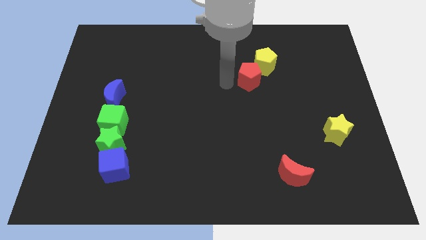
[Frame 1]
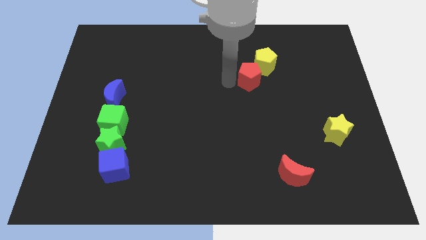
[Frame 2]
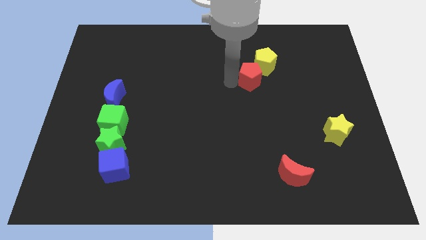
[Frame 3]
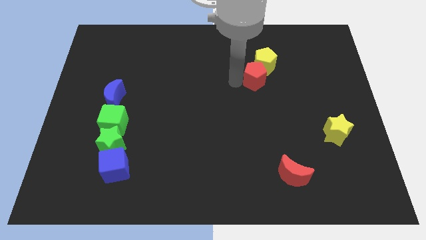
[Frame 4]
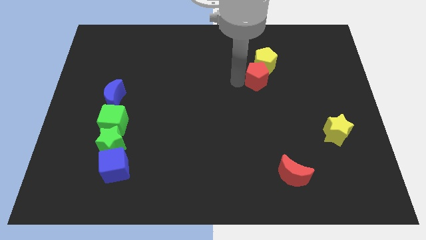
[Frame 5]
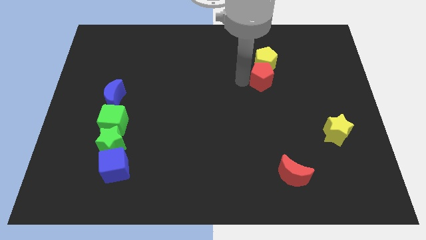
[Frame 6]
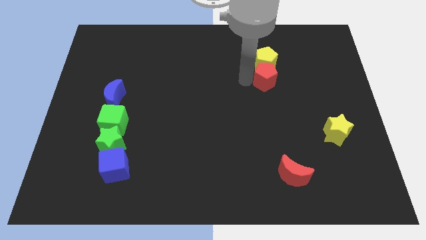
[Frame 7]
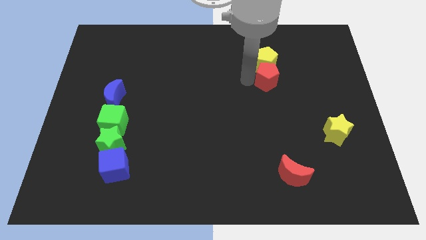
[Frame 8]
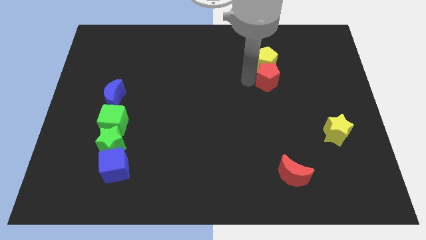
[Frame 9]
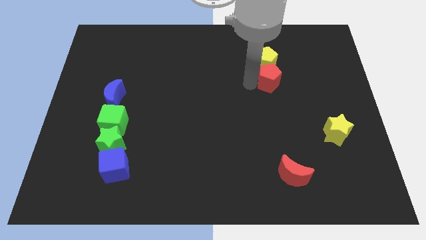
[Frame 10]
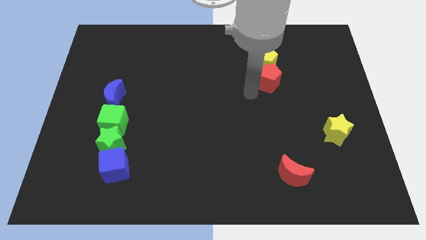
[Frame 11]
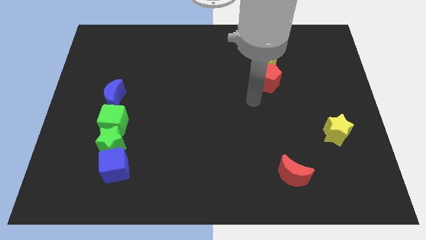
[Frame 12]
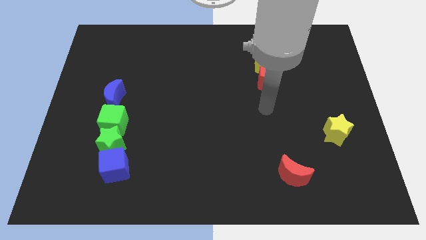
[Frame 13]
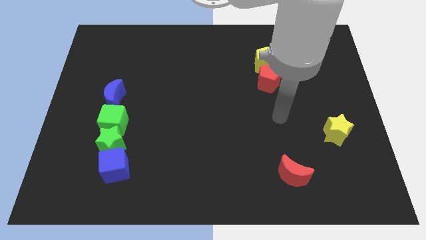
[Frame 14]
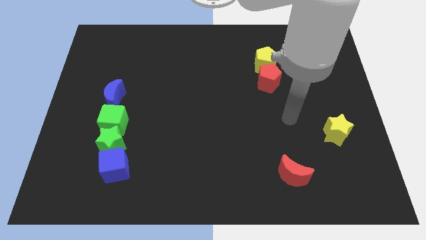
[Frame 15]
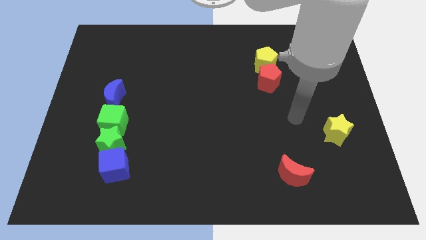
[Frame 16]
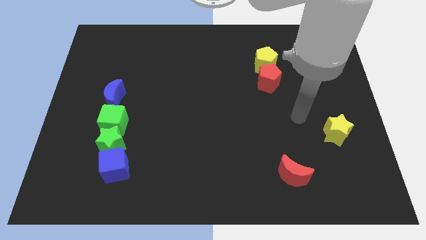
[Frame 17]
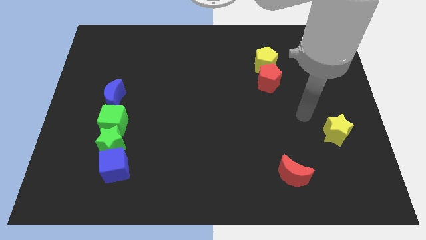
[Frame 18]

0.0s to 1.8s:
place the red pentagon to the bottom of the yellow pentagon

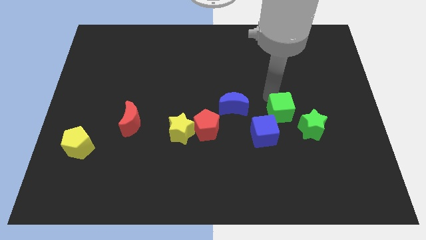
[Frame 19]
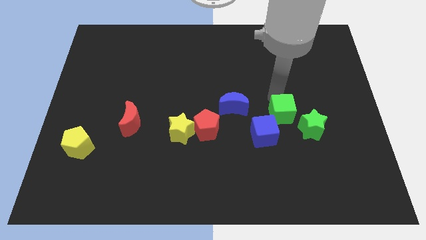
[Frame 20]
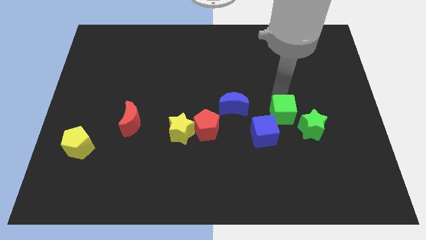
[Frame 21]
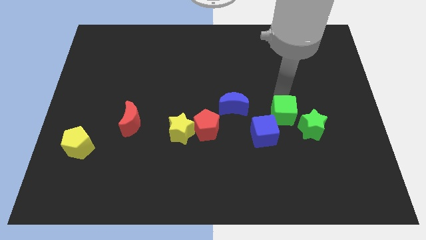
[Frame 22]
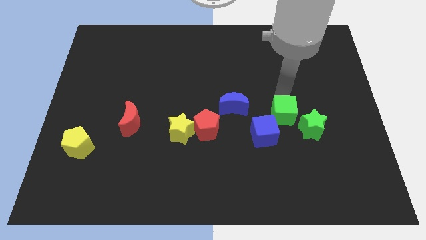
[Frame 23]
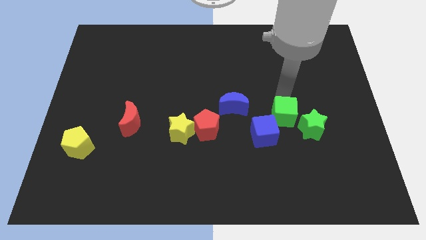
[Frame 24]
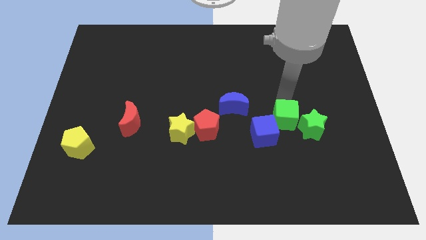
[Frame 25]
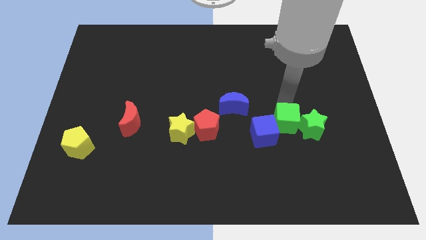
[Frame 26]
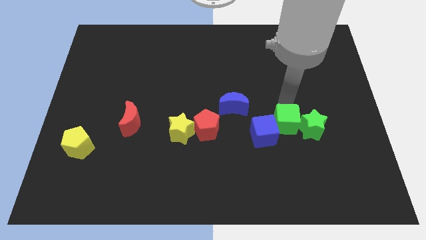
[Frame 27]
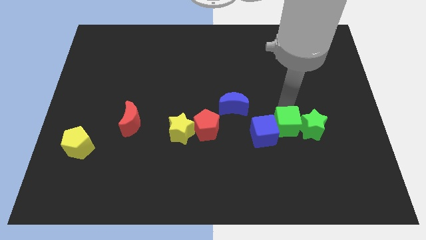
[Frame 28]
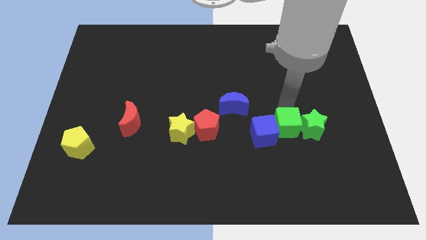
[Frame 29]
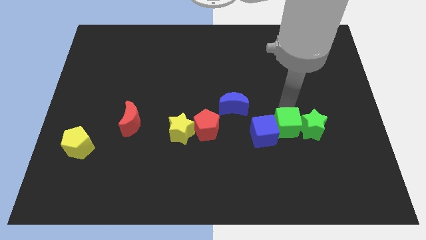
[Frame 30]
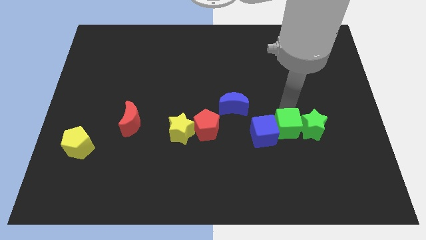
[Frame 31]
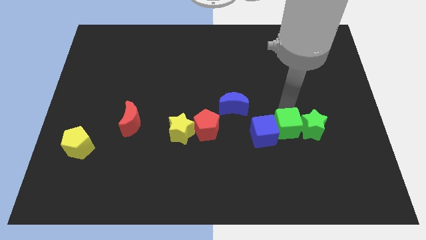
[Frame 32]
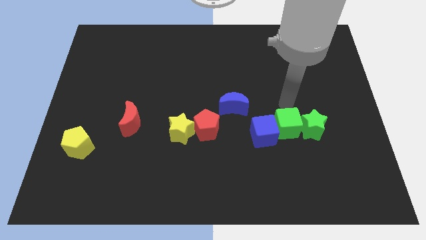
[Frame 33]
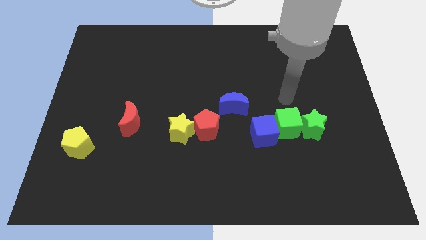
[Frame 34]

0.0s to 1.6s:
place the green cube between the blue cube and green star

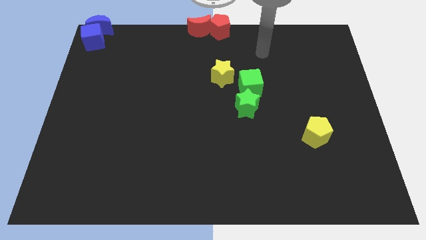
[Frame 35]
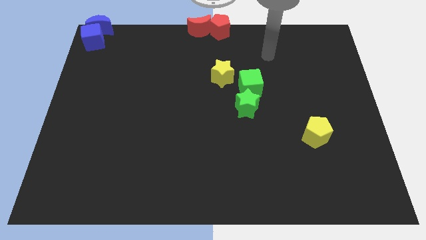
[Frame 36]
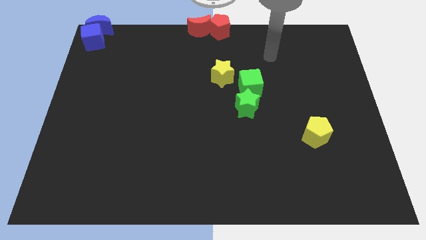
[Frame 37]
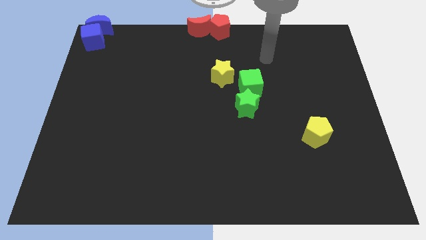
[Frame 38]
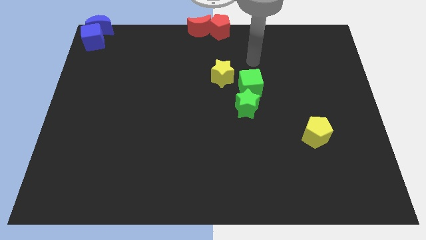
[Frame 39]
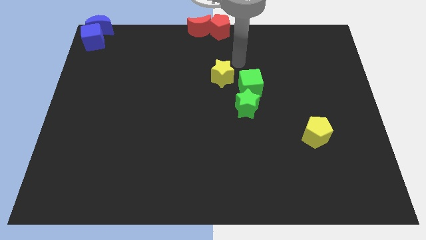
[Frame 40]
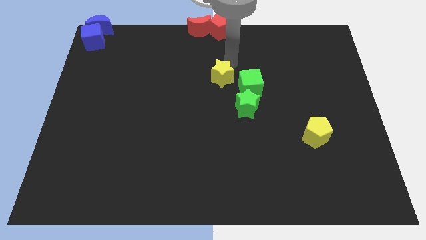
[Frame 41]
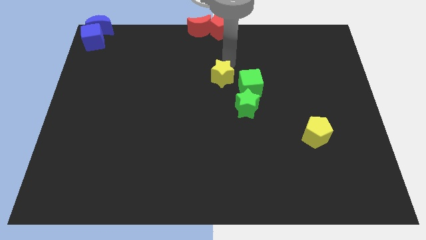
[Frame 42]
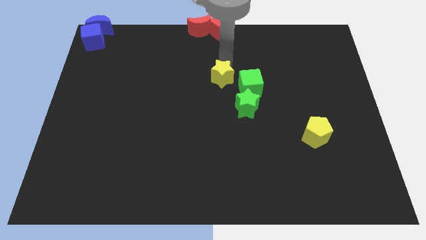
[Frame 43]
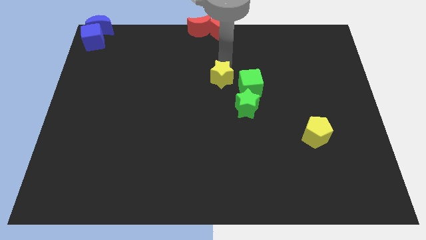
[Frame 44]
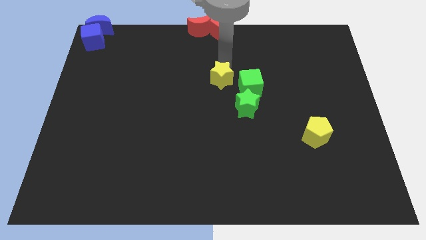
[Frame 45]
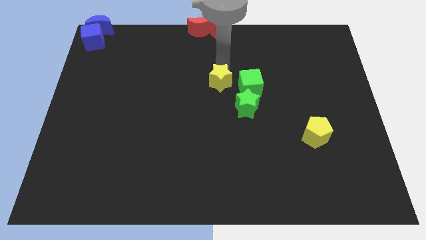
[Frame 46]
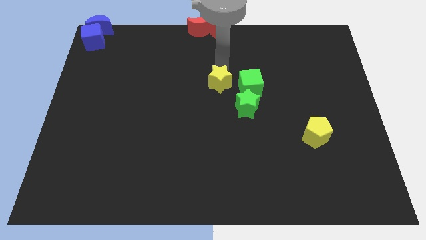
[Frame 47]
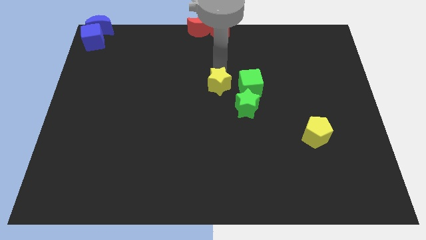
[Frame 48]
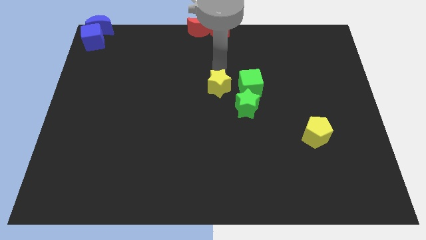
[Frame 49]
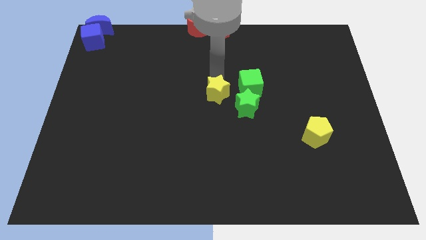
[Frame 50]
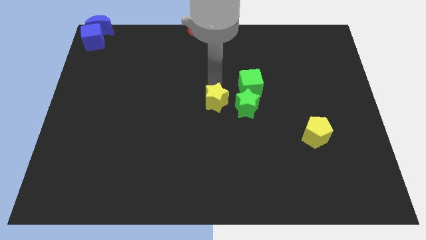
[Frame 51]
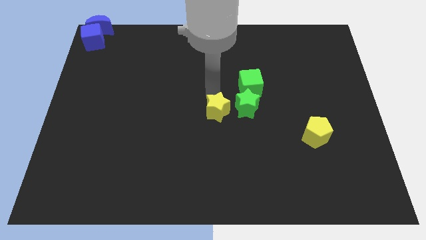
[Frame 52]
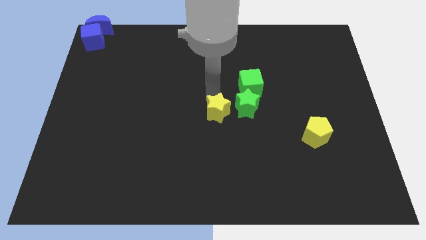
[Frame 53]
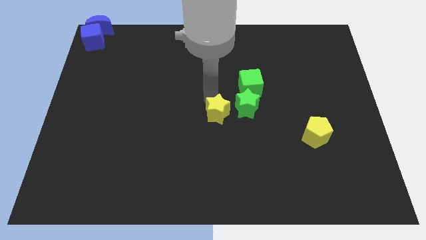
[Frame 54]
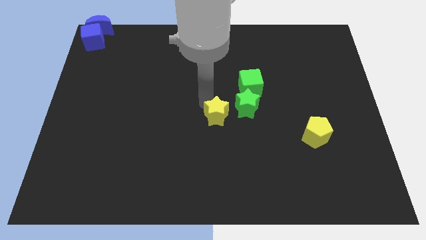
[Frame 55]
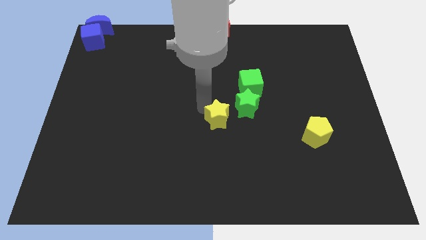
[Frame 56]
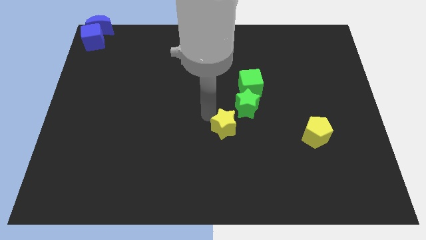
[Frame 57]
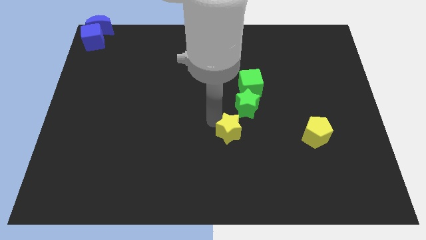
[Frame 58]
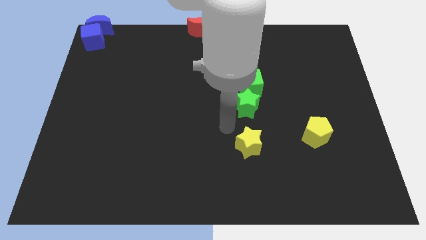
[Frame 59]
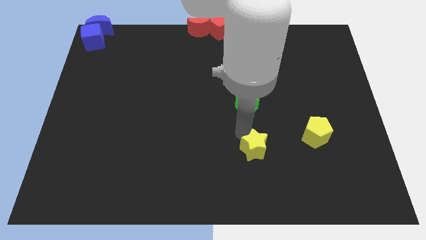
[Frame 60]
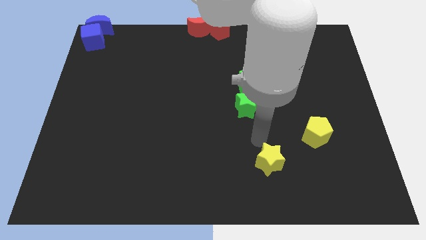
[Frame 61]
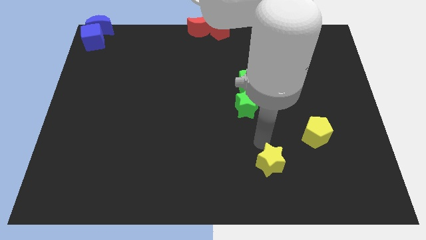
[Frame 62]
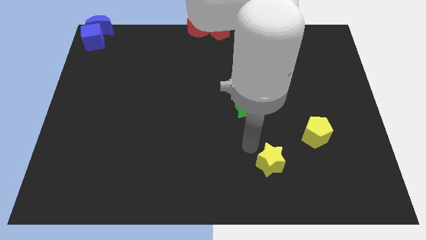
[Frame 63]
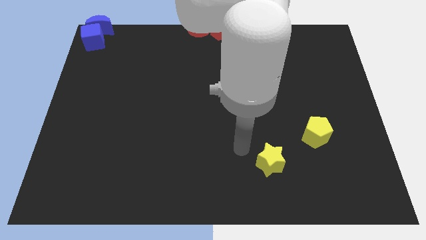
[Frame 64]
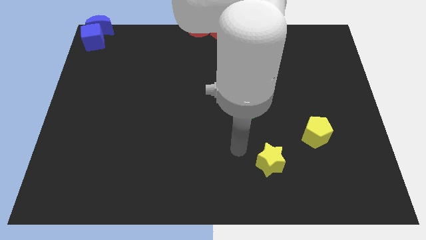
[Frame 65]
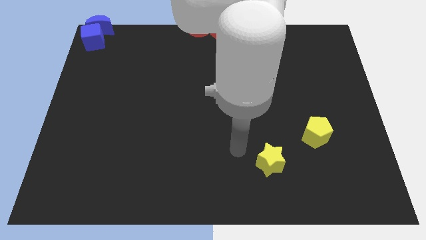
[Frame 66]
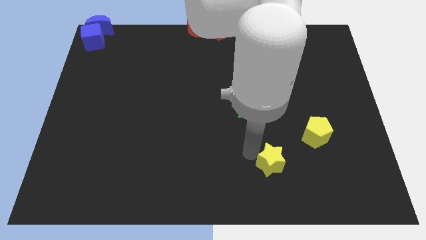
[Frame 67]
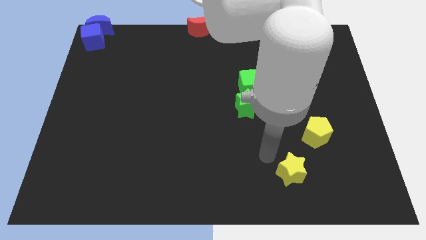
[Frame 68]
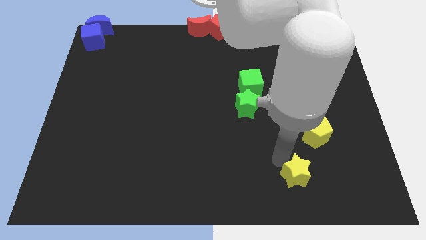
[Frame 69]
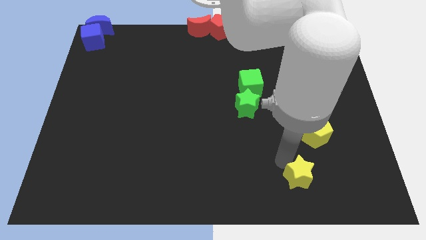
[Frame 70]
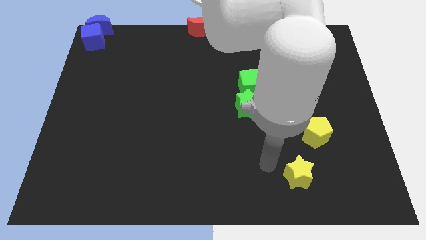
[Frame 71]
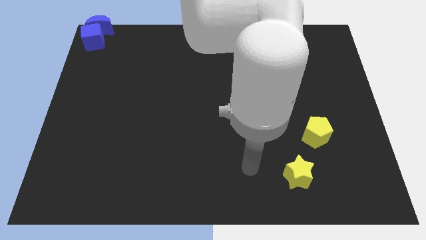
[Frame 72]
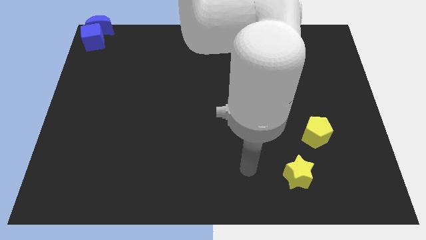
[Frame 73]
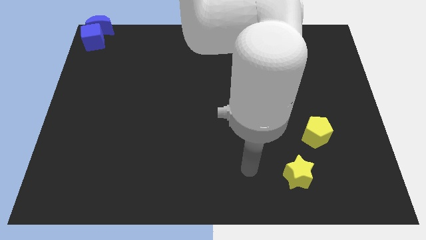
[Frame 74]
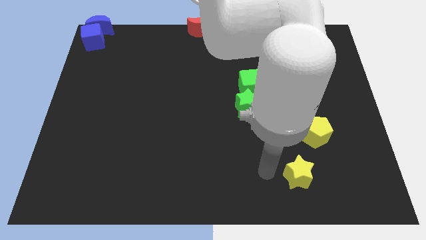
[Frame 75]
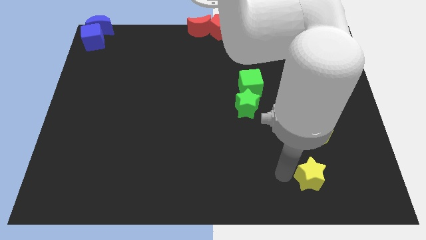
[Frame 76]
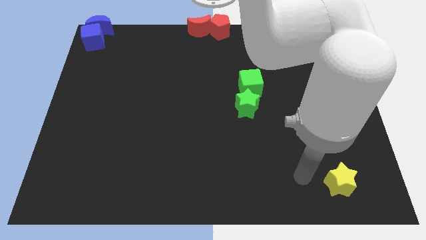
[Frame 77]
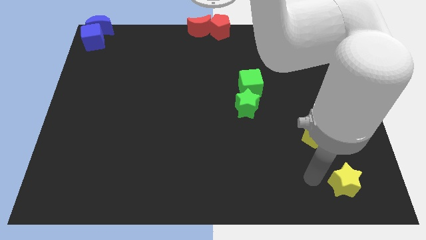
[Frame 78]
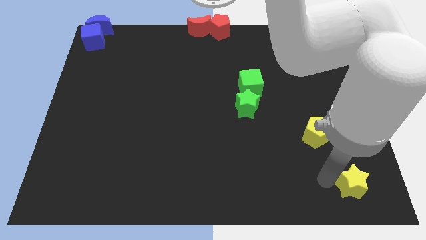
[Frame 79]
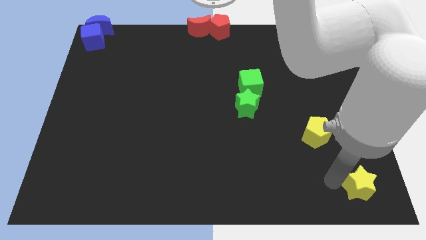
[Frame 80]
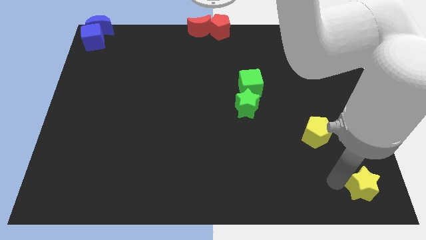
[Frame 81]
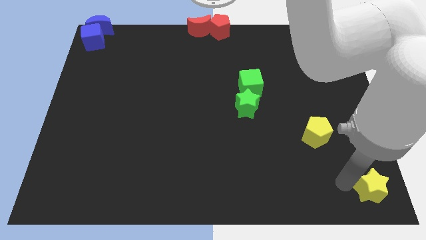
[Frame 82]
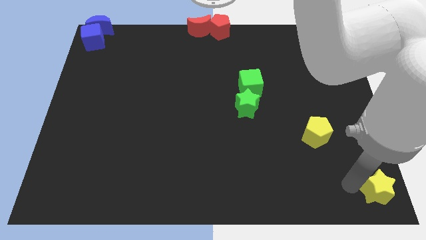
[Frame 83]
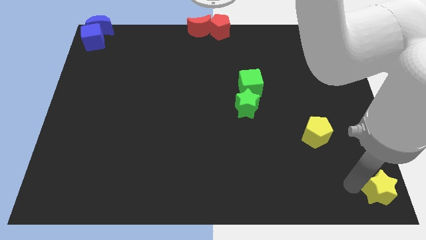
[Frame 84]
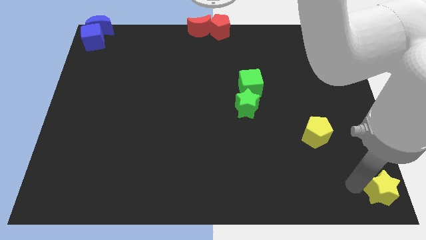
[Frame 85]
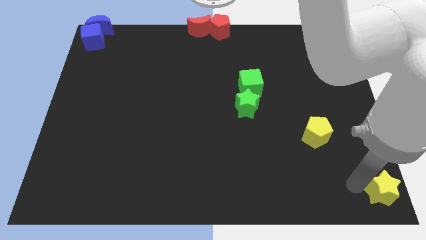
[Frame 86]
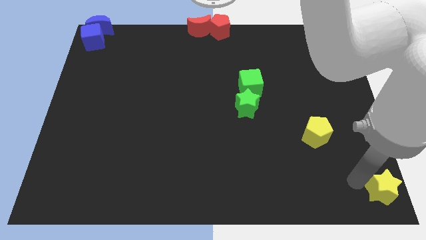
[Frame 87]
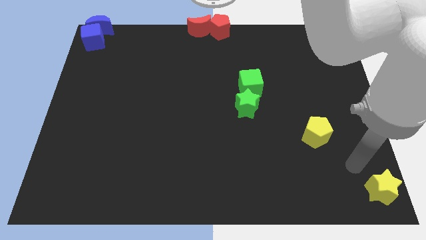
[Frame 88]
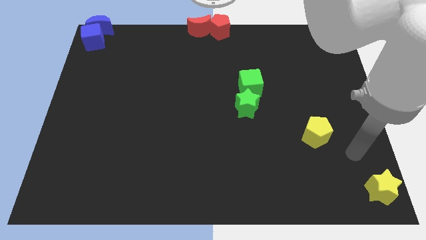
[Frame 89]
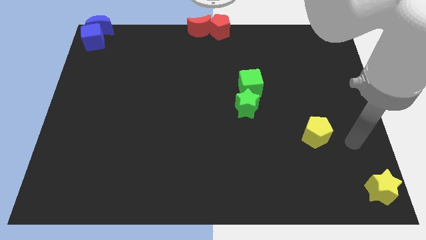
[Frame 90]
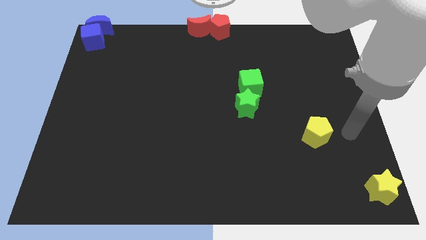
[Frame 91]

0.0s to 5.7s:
push the yellow star to the bottom right of the board
